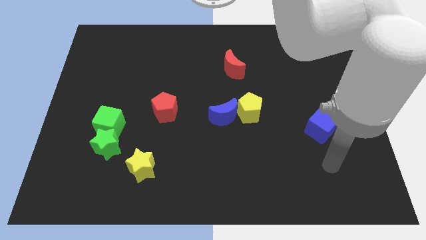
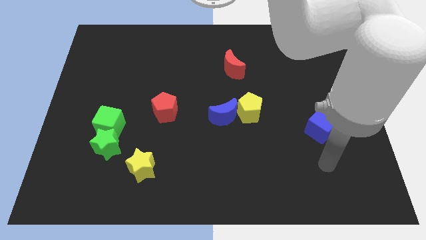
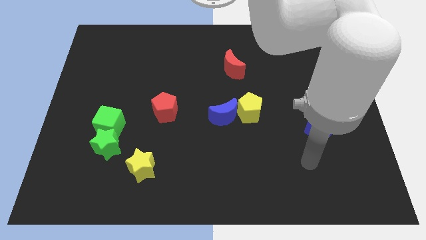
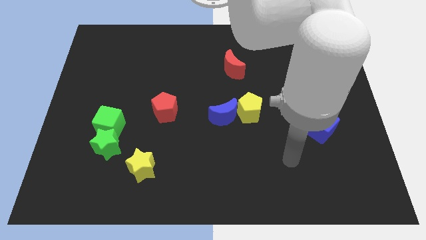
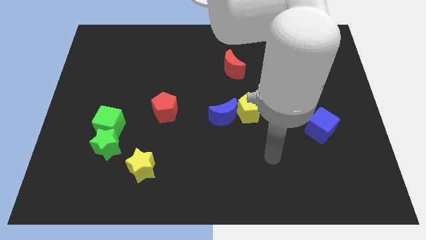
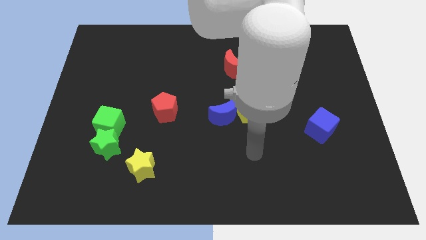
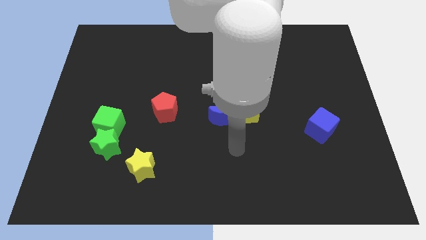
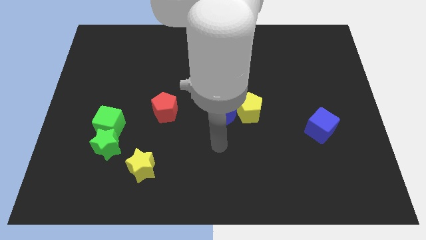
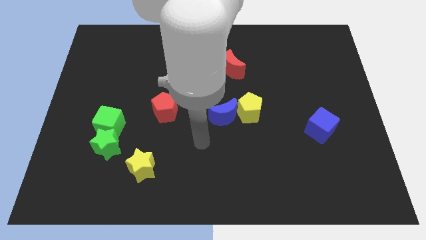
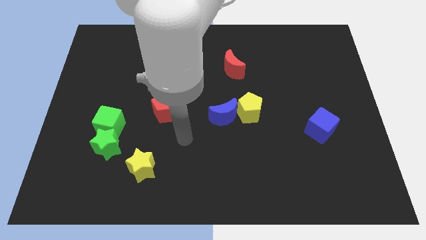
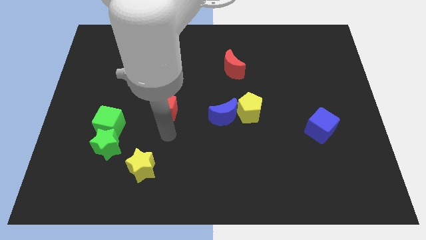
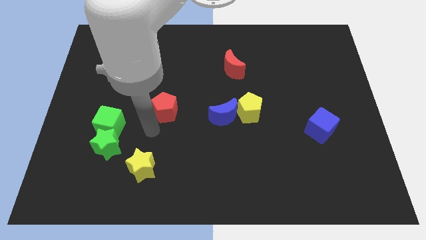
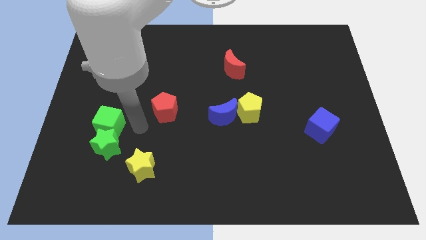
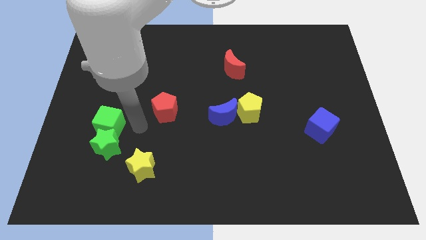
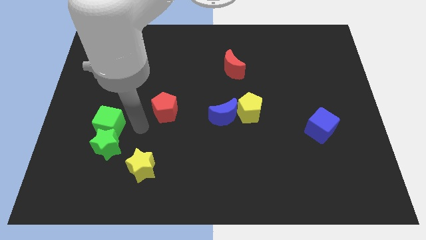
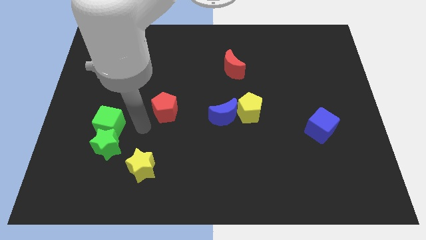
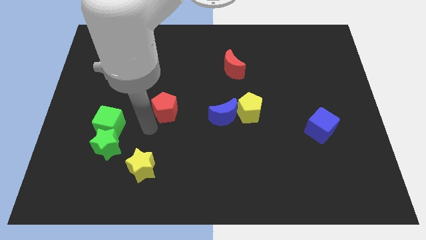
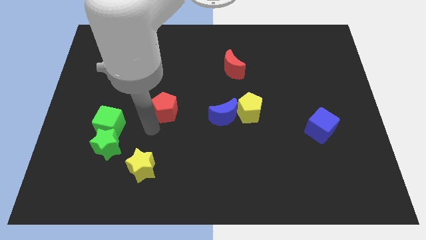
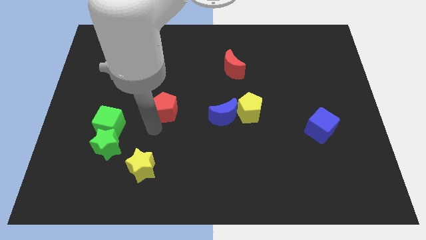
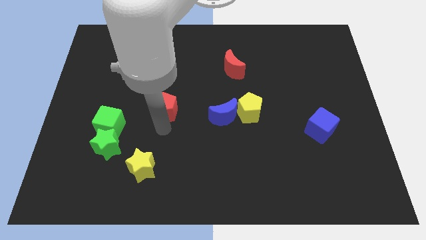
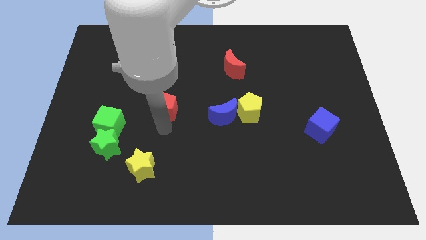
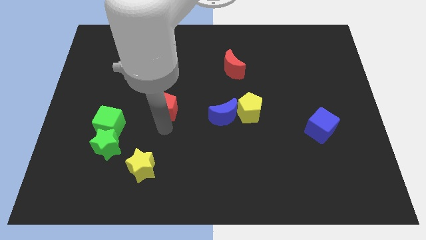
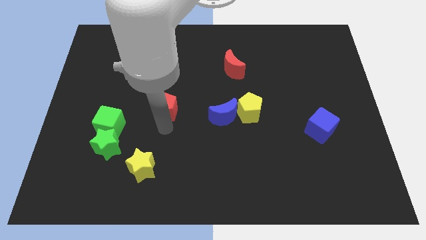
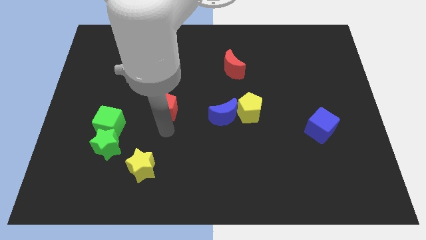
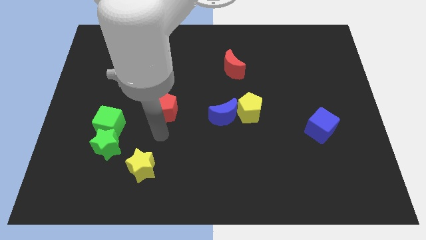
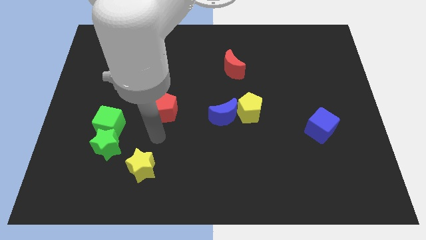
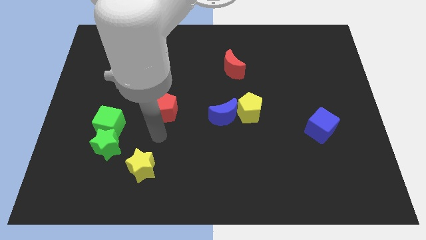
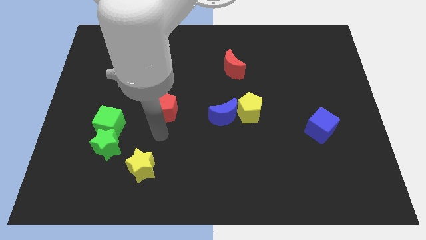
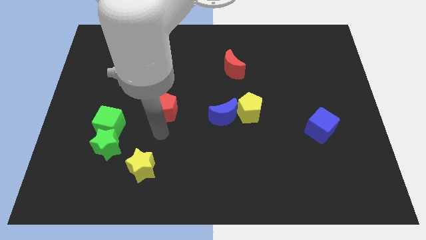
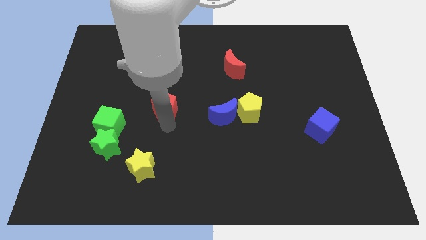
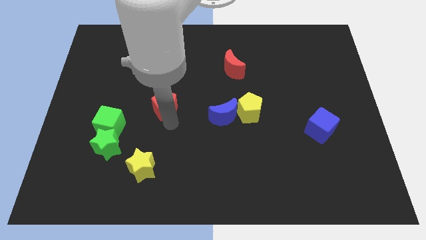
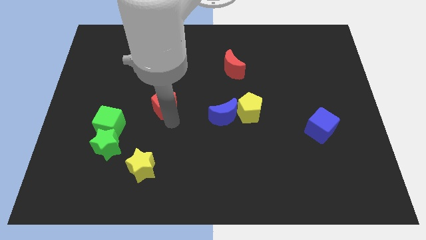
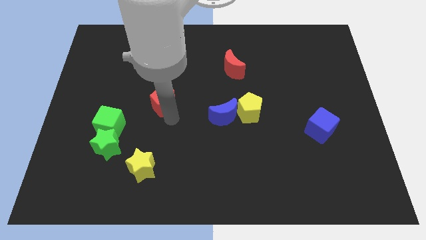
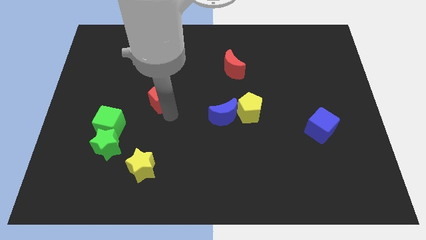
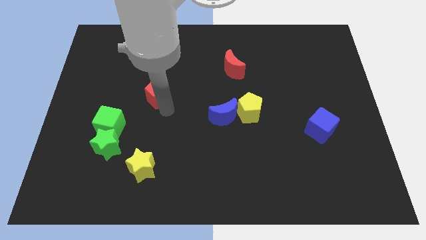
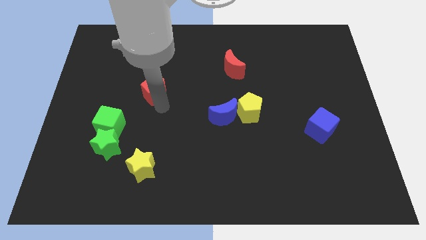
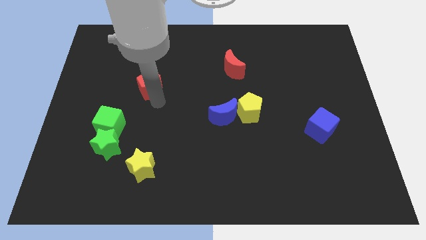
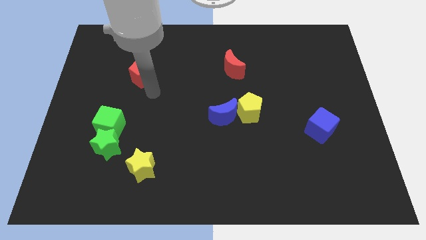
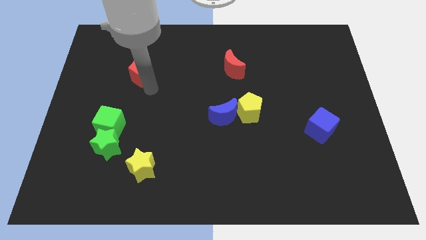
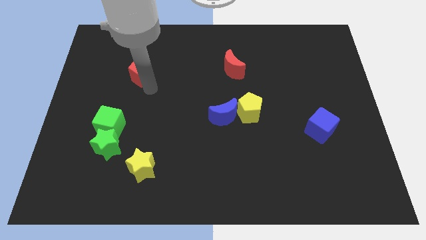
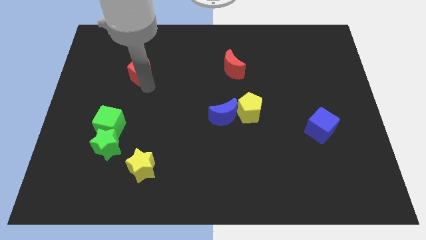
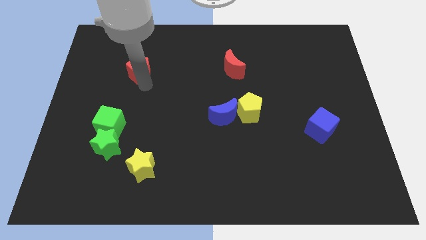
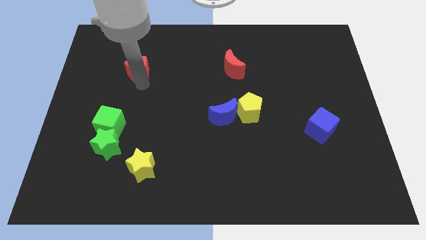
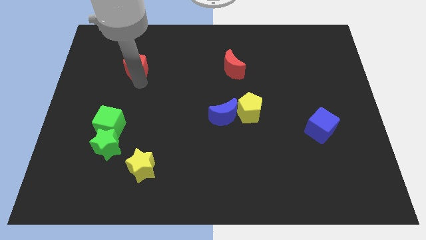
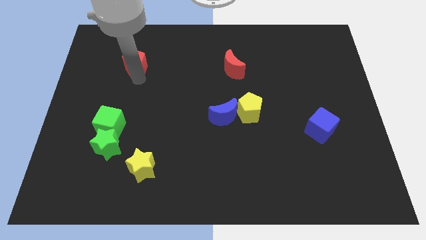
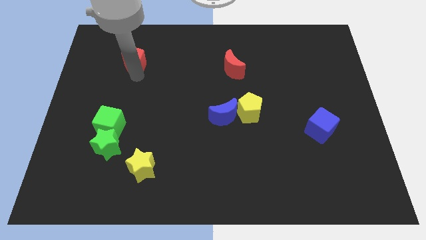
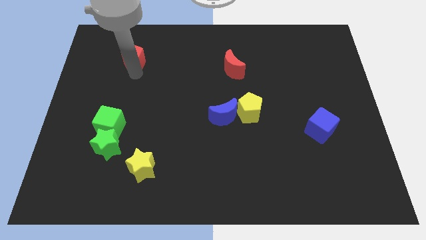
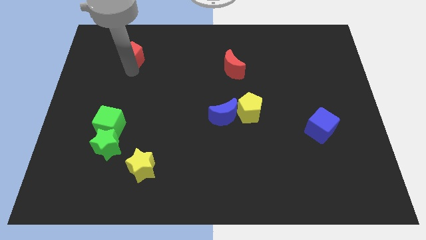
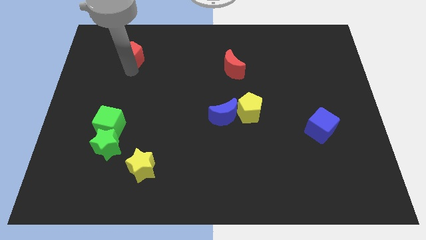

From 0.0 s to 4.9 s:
push the red pentagon above the green blocks

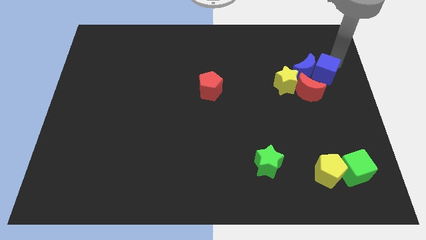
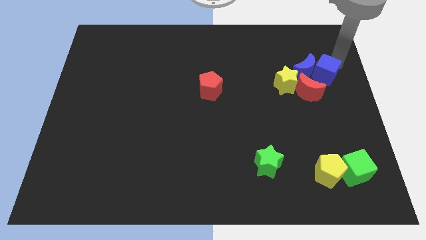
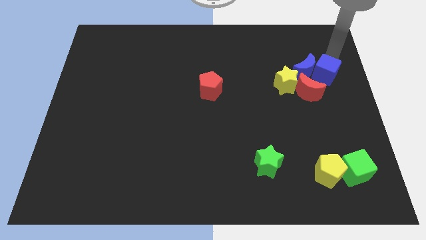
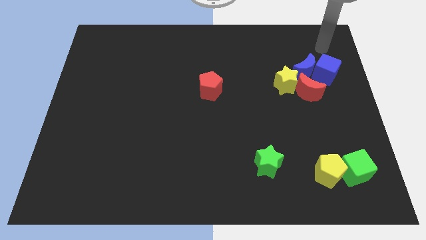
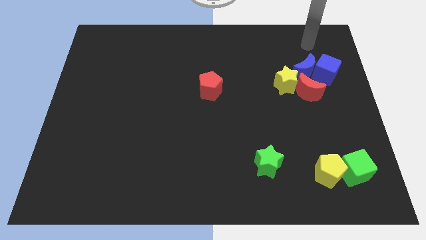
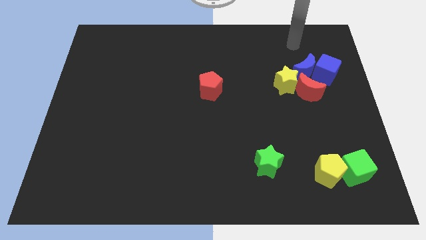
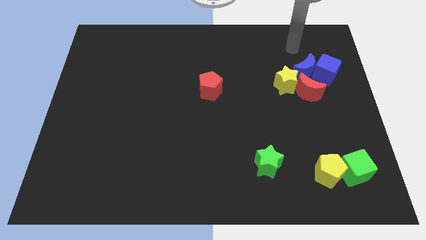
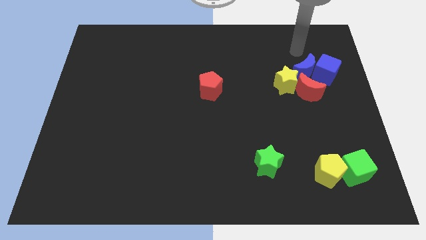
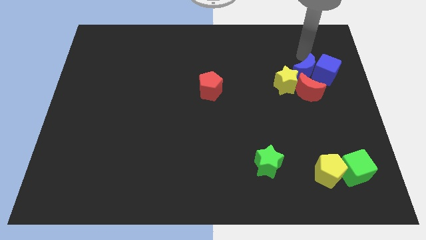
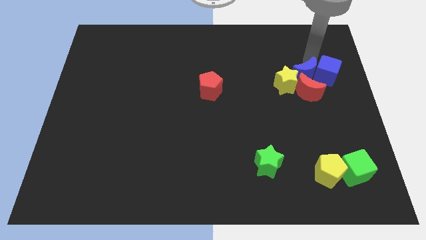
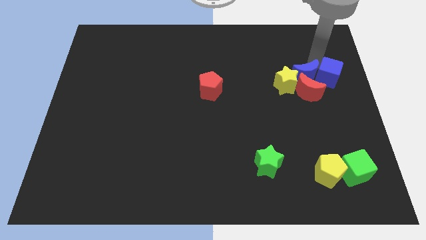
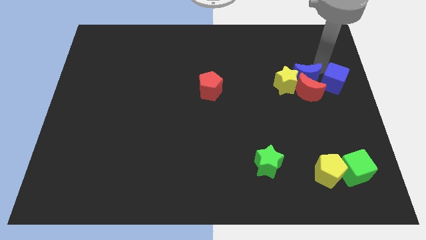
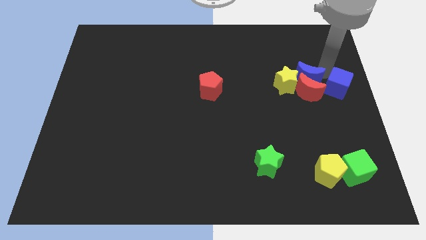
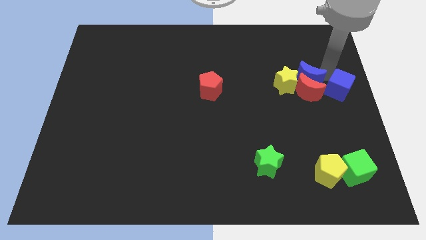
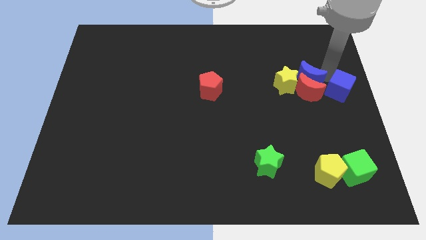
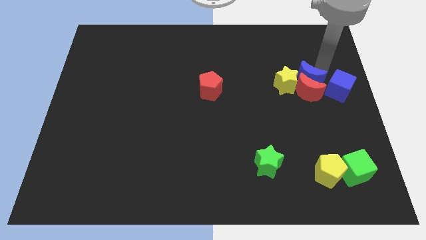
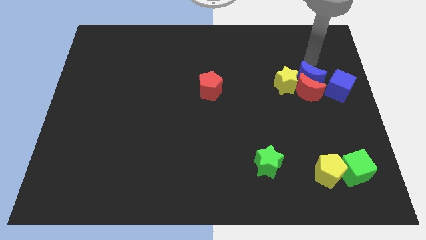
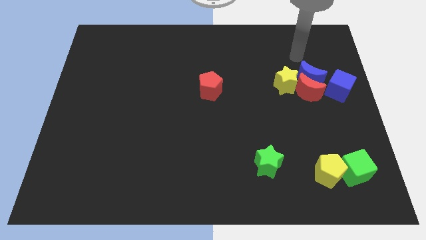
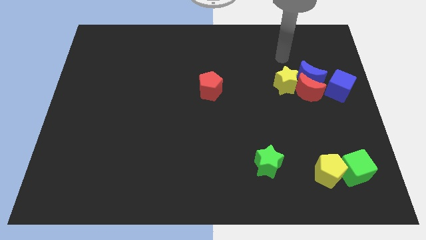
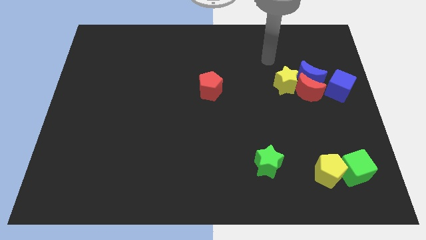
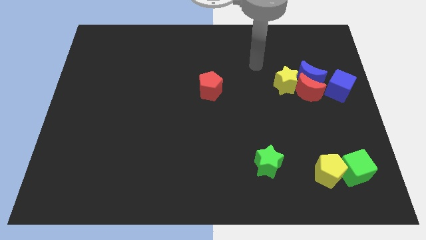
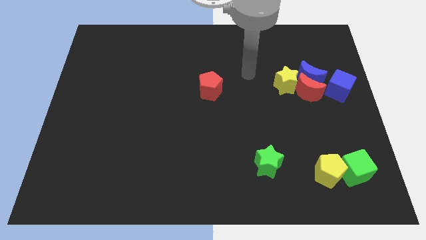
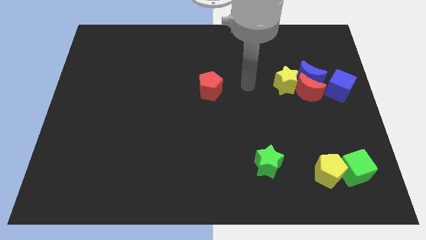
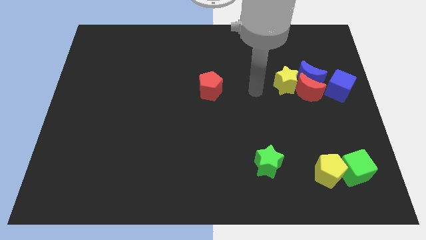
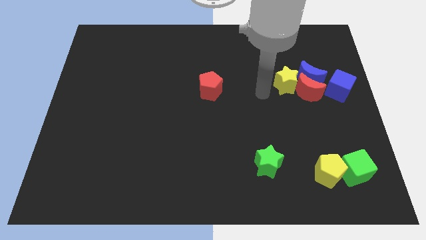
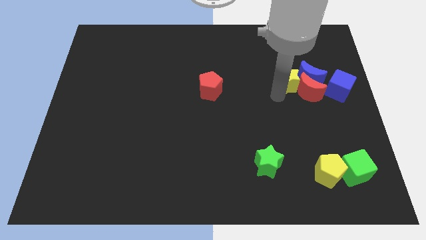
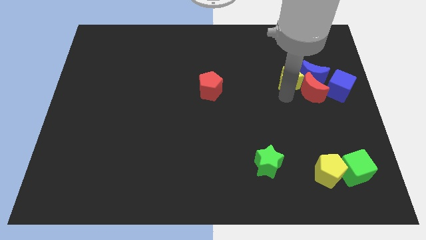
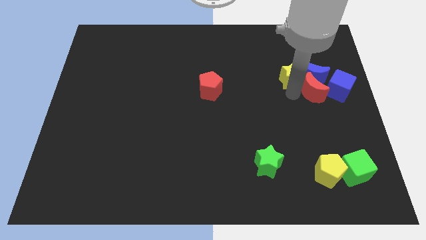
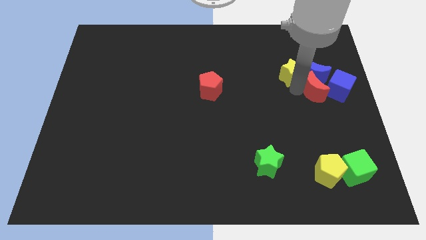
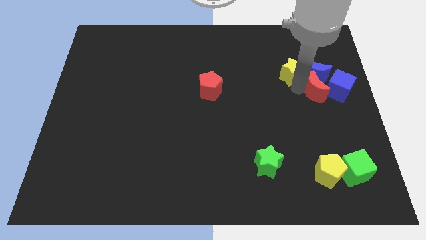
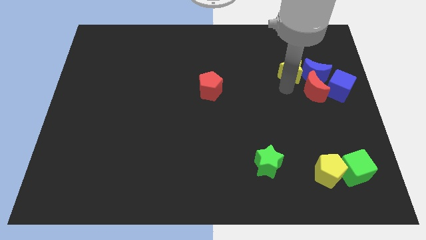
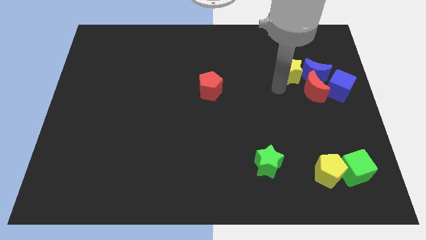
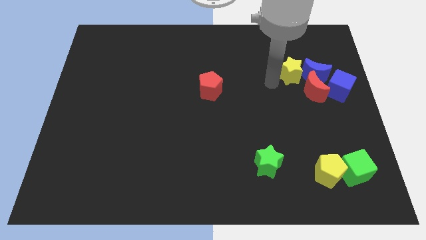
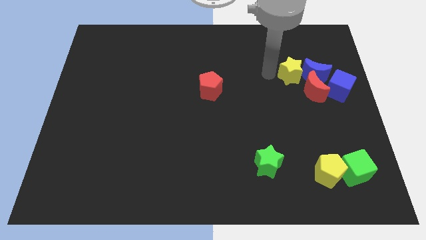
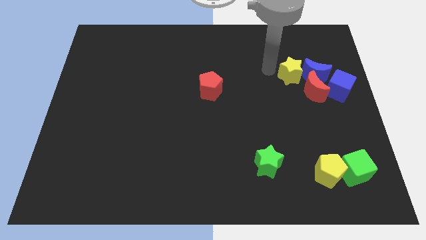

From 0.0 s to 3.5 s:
place your arm to the left of yellow star

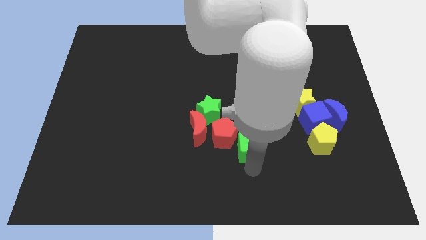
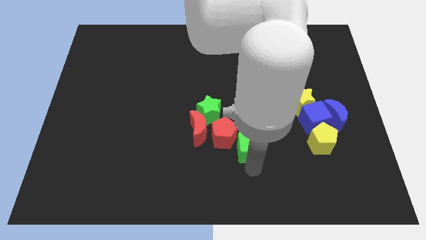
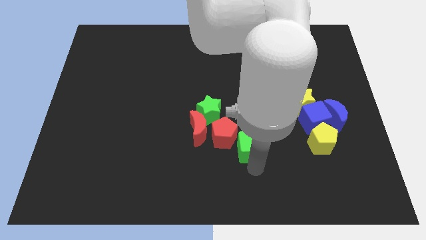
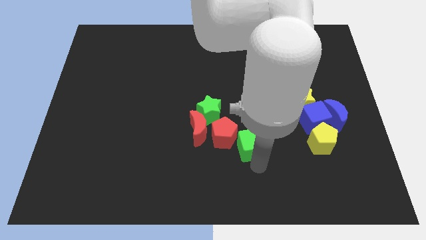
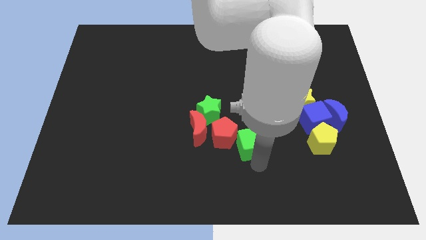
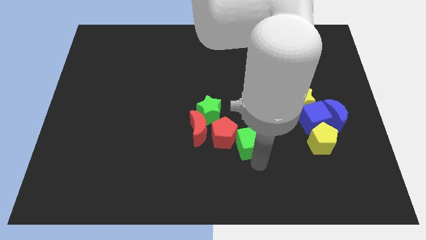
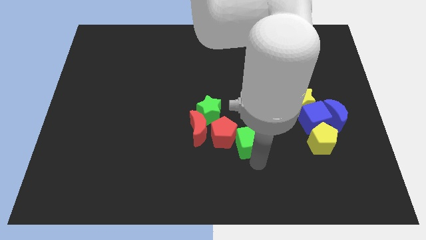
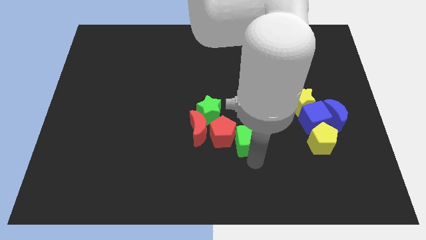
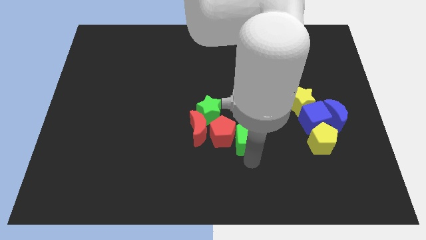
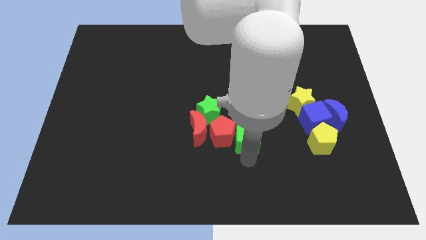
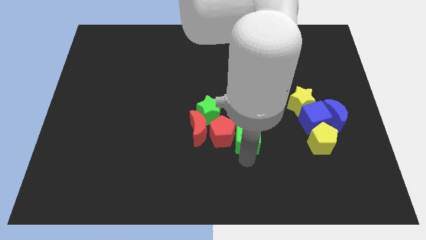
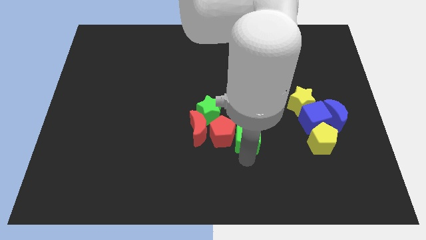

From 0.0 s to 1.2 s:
move the green cube to the right of the red pentagon
